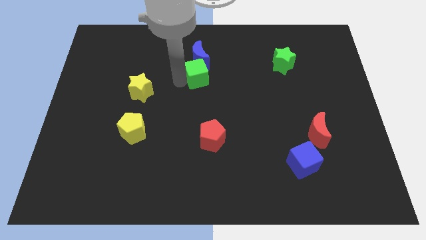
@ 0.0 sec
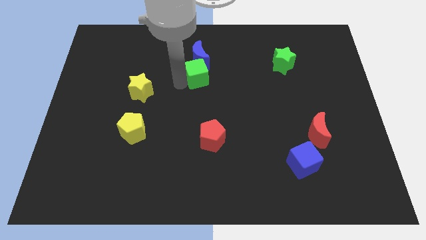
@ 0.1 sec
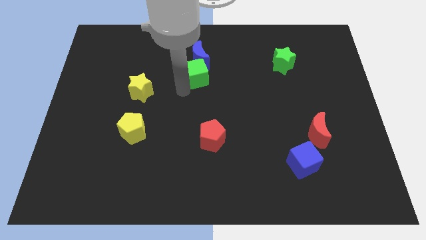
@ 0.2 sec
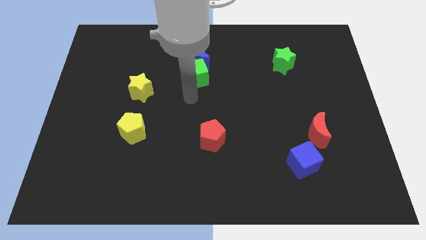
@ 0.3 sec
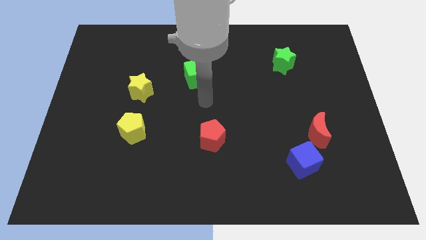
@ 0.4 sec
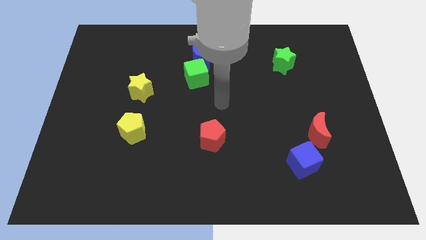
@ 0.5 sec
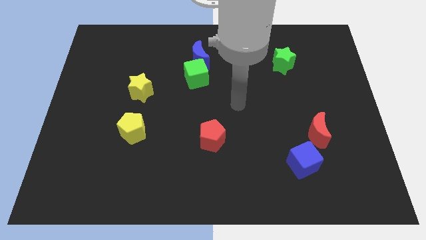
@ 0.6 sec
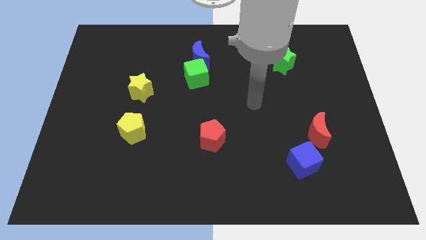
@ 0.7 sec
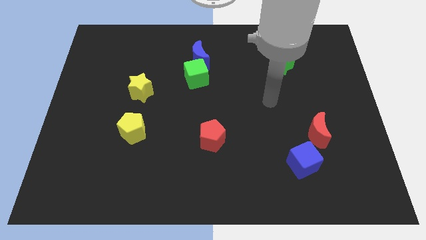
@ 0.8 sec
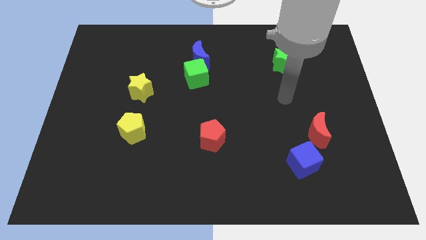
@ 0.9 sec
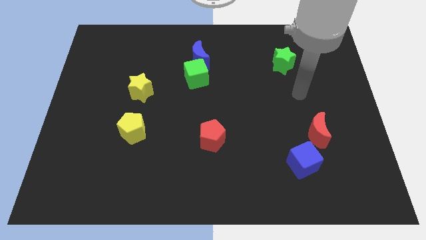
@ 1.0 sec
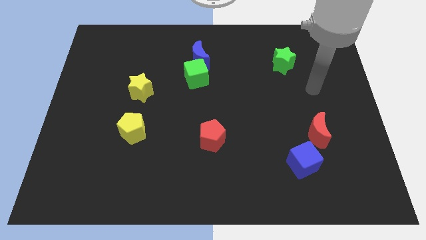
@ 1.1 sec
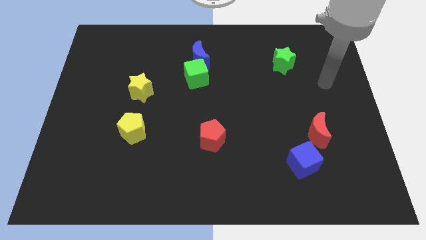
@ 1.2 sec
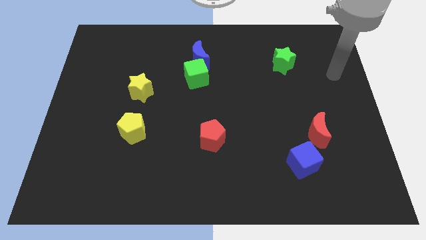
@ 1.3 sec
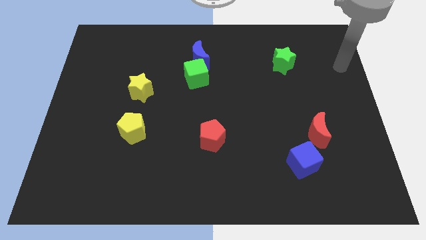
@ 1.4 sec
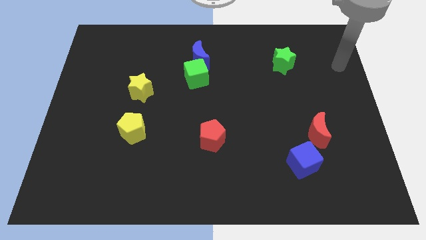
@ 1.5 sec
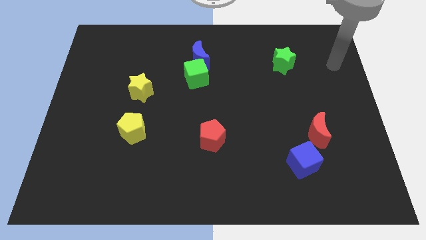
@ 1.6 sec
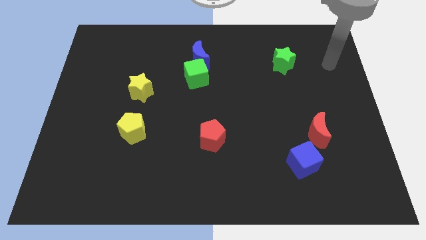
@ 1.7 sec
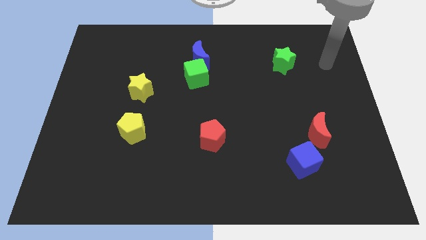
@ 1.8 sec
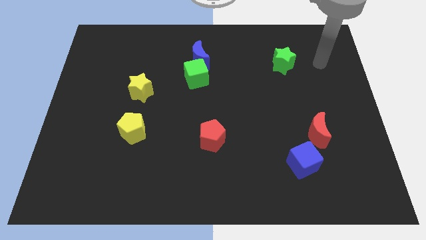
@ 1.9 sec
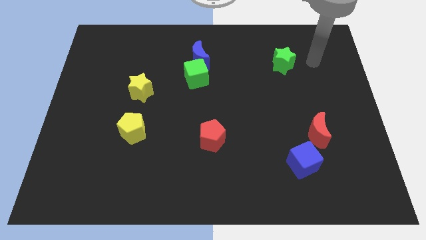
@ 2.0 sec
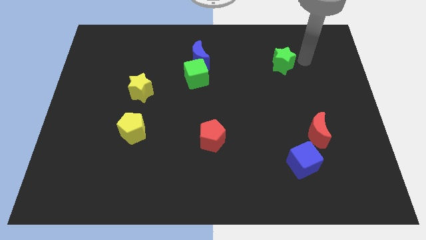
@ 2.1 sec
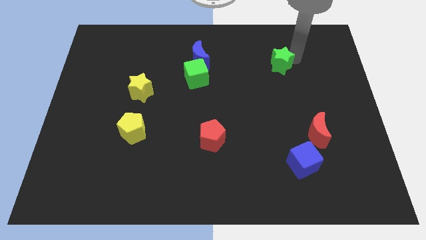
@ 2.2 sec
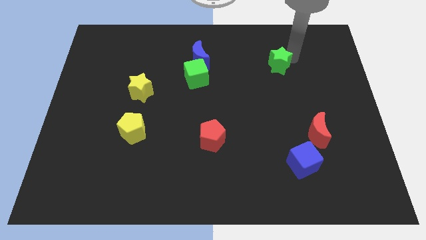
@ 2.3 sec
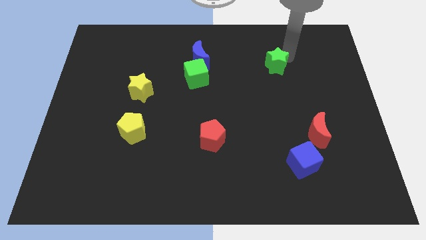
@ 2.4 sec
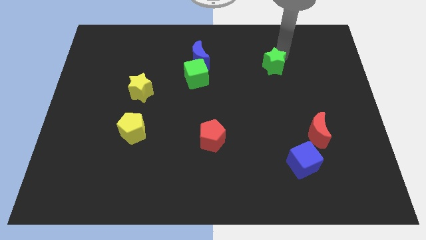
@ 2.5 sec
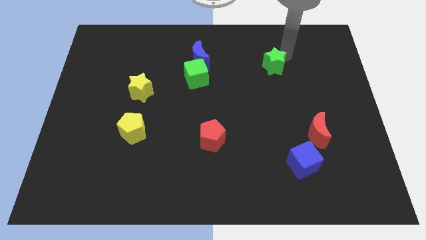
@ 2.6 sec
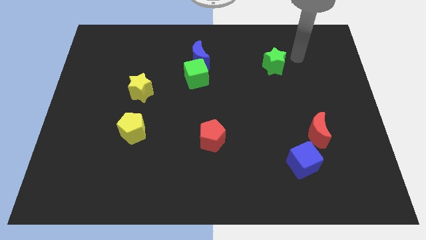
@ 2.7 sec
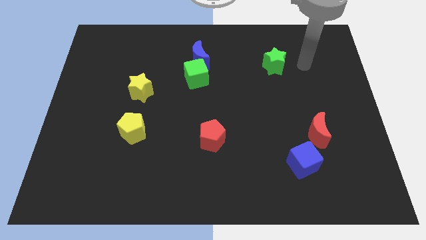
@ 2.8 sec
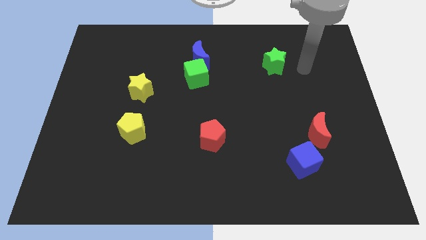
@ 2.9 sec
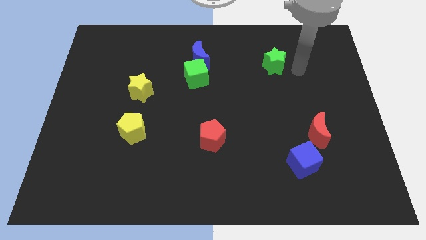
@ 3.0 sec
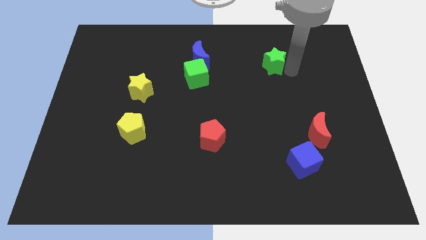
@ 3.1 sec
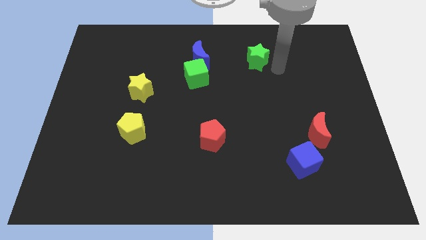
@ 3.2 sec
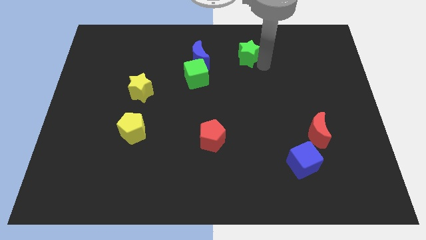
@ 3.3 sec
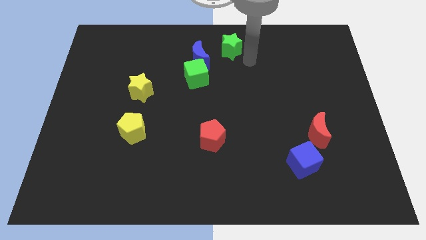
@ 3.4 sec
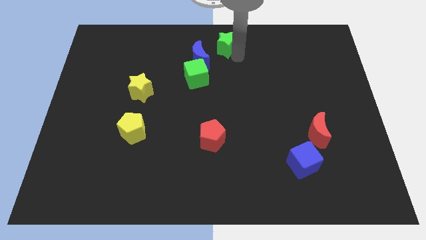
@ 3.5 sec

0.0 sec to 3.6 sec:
push the green star top center

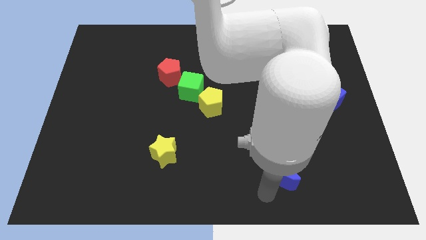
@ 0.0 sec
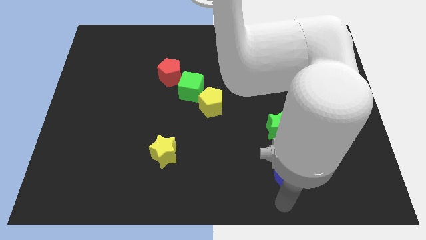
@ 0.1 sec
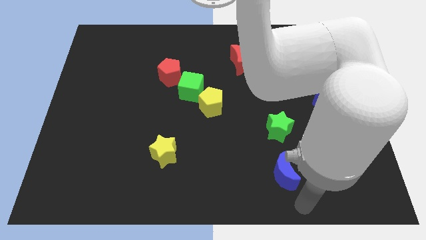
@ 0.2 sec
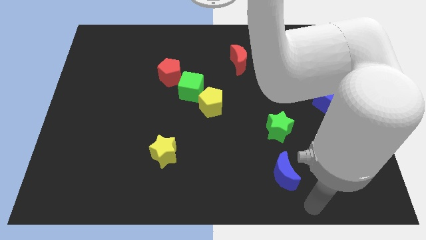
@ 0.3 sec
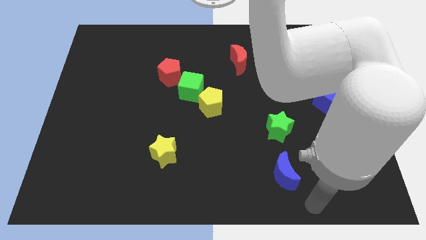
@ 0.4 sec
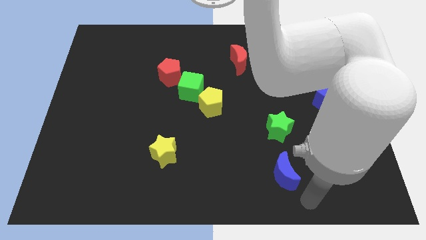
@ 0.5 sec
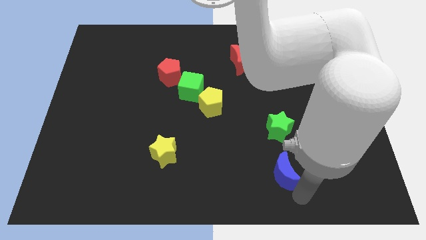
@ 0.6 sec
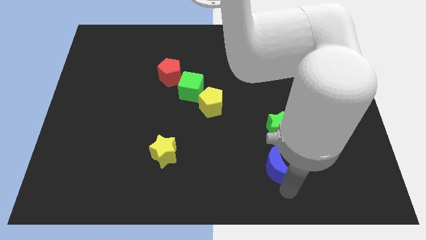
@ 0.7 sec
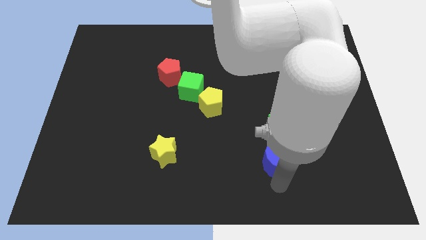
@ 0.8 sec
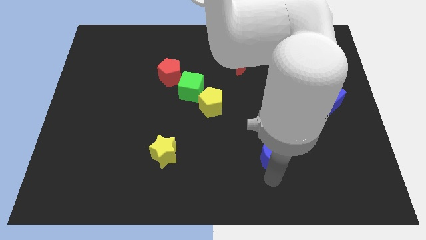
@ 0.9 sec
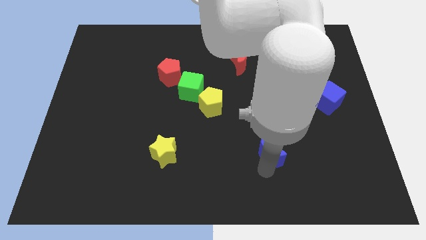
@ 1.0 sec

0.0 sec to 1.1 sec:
slightly push the blue moon upwards

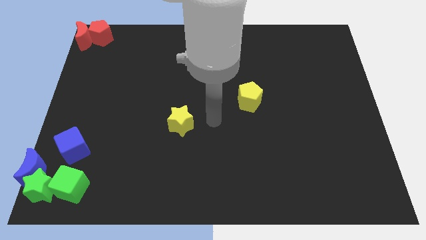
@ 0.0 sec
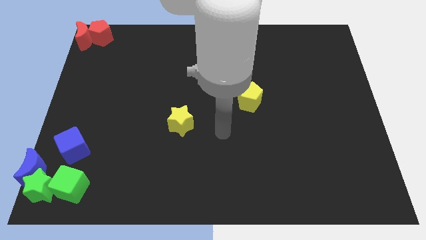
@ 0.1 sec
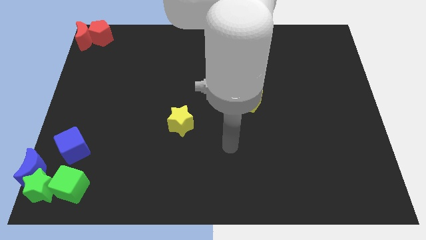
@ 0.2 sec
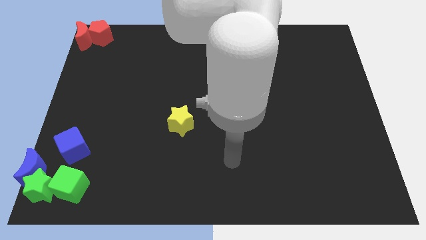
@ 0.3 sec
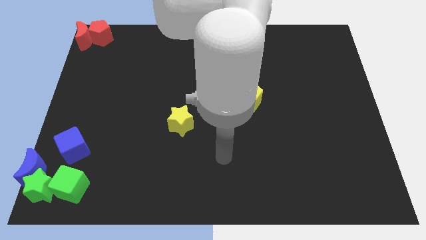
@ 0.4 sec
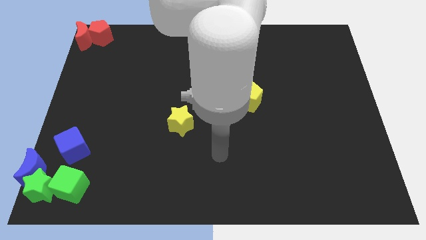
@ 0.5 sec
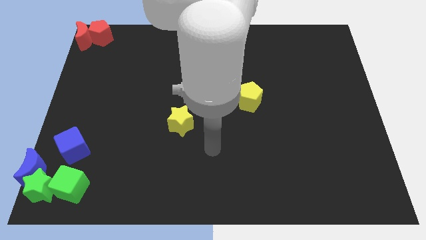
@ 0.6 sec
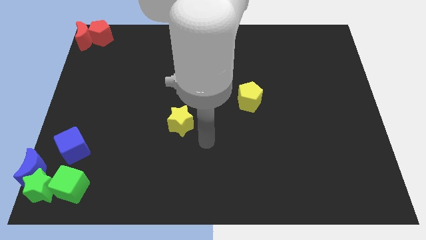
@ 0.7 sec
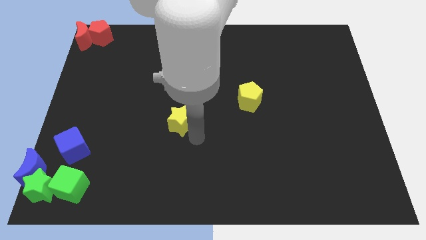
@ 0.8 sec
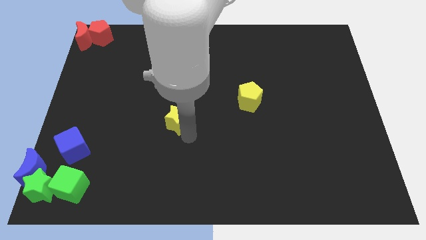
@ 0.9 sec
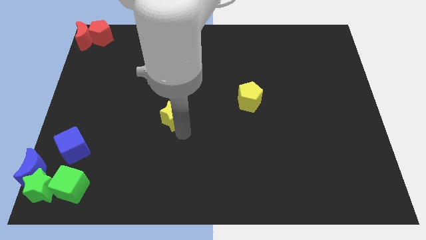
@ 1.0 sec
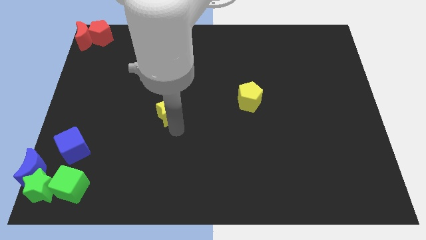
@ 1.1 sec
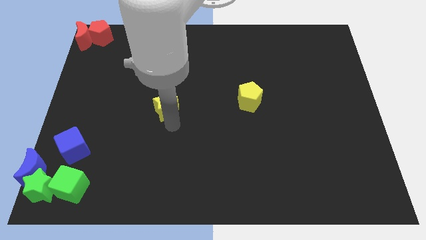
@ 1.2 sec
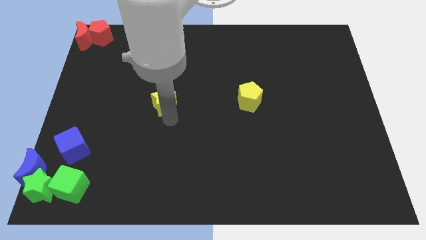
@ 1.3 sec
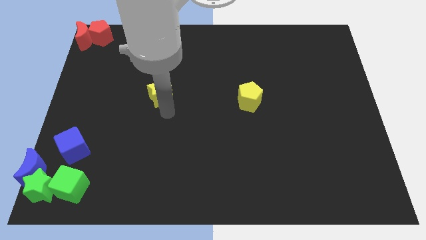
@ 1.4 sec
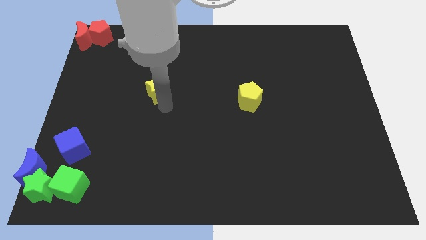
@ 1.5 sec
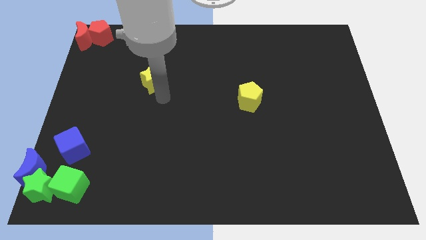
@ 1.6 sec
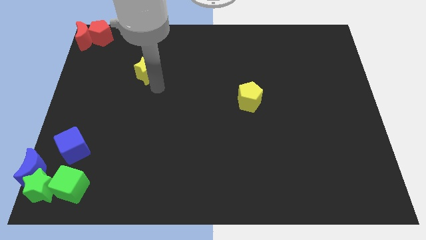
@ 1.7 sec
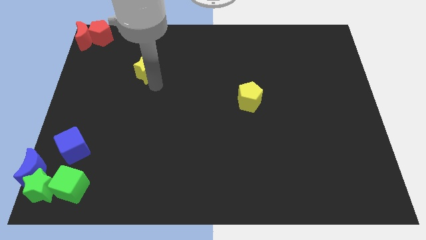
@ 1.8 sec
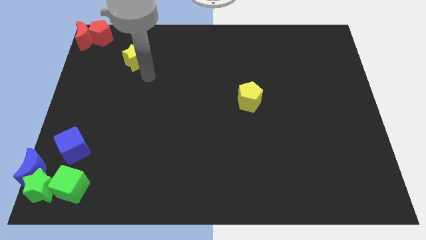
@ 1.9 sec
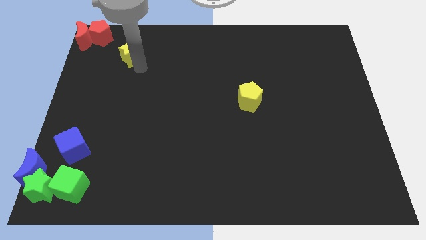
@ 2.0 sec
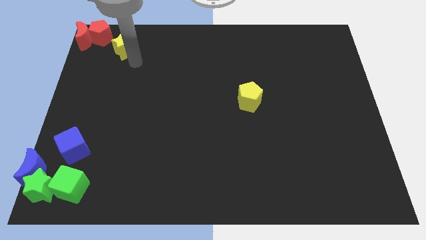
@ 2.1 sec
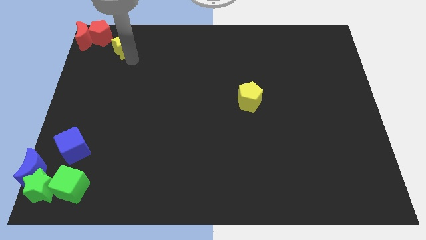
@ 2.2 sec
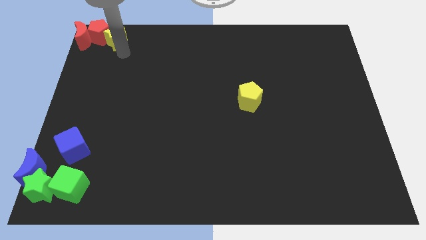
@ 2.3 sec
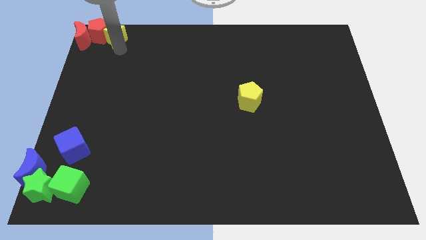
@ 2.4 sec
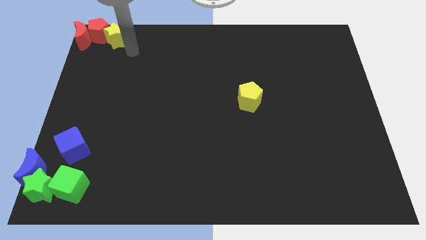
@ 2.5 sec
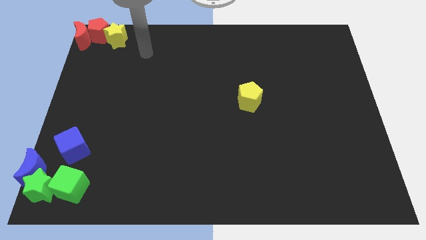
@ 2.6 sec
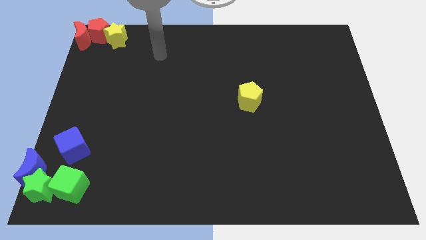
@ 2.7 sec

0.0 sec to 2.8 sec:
move the yellow star into red pentagon

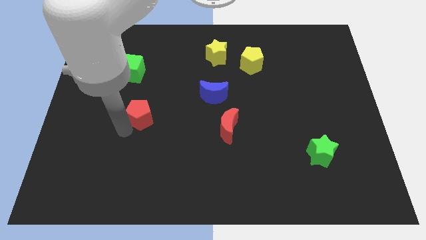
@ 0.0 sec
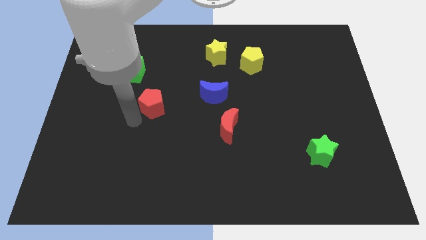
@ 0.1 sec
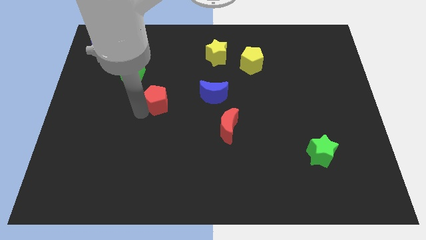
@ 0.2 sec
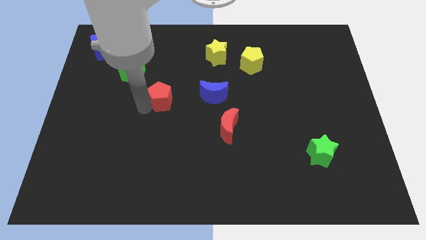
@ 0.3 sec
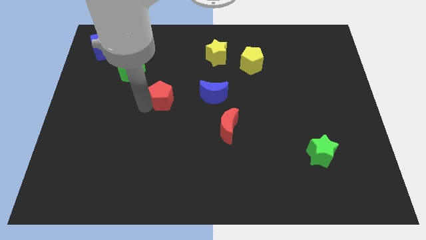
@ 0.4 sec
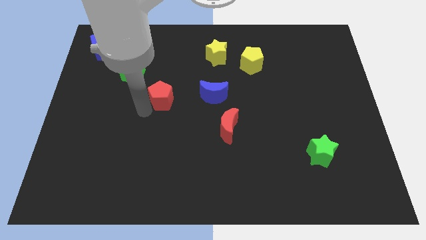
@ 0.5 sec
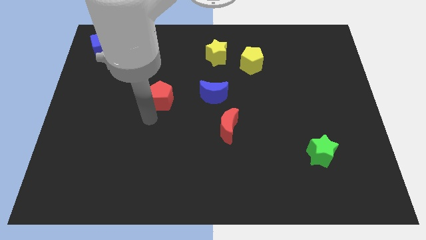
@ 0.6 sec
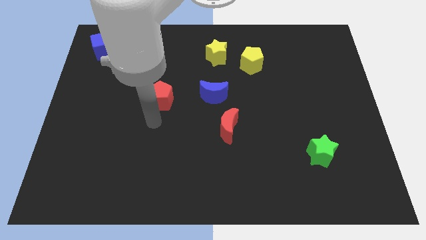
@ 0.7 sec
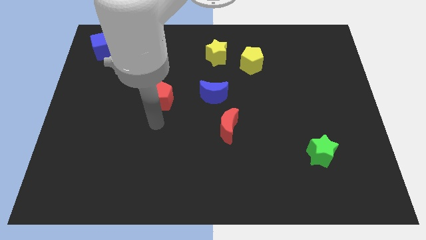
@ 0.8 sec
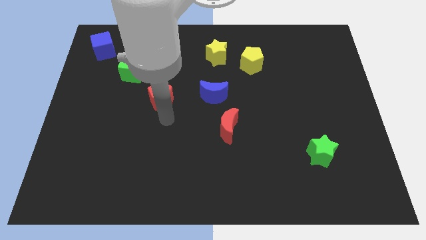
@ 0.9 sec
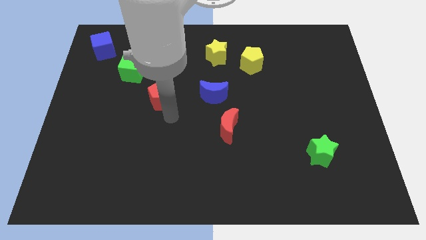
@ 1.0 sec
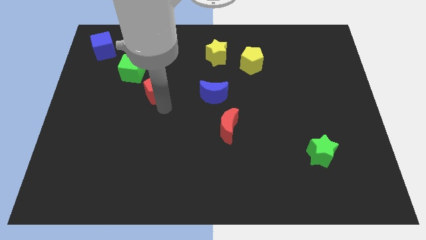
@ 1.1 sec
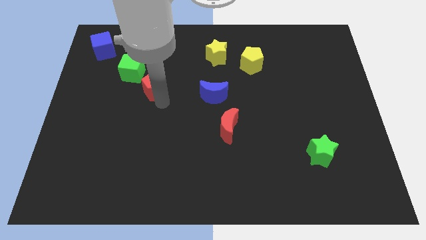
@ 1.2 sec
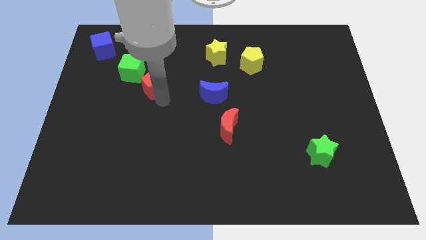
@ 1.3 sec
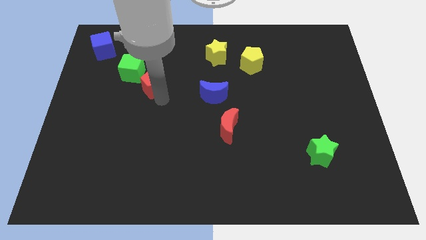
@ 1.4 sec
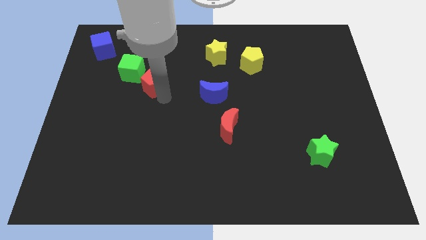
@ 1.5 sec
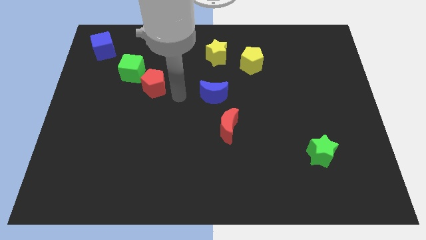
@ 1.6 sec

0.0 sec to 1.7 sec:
place the red pentagon in between the blue moon and green cube
